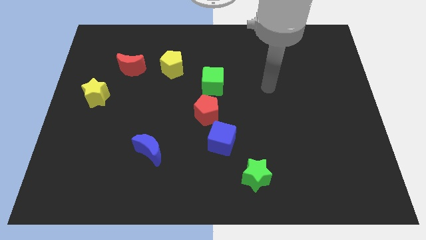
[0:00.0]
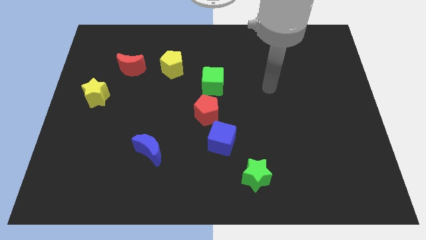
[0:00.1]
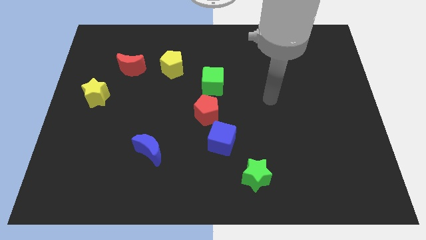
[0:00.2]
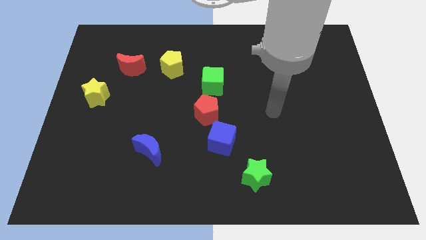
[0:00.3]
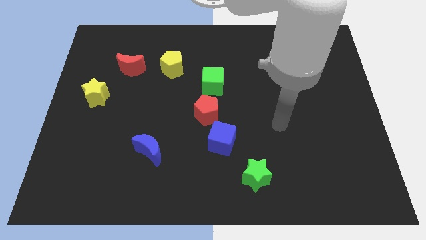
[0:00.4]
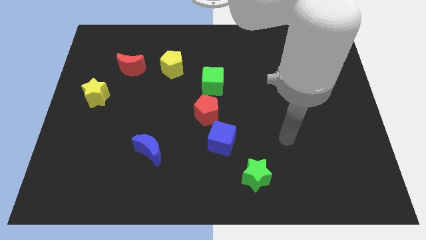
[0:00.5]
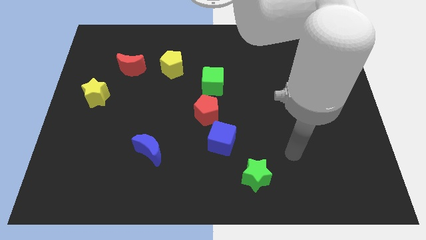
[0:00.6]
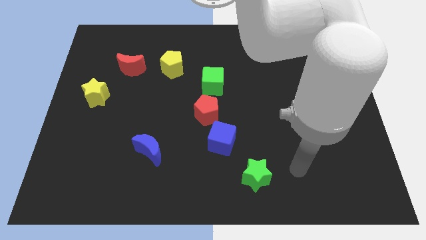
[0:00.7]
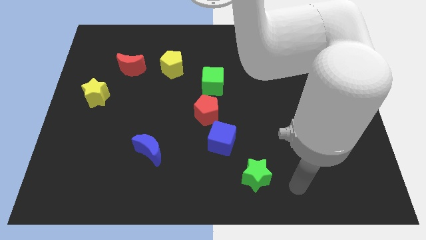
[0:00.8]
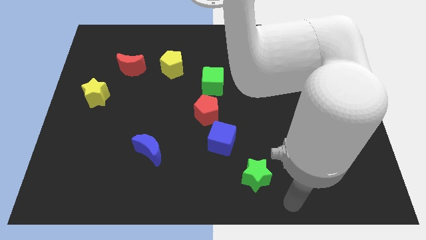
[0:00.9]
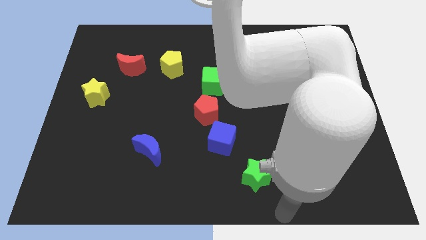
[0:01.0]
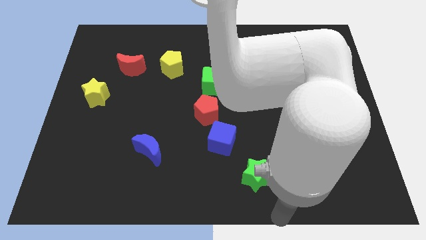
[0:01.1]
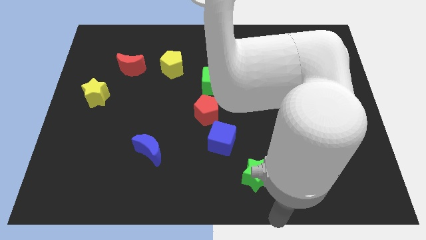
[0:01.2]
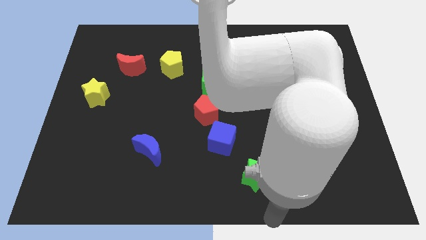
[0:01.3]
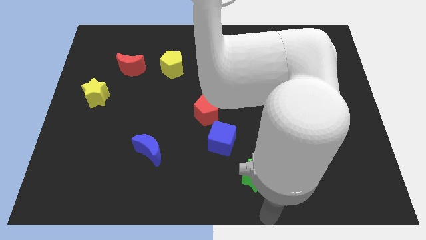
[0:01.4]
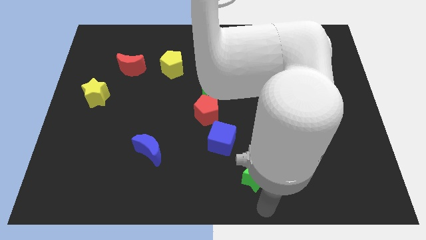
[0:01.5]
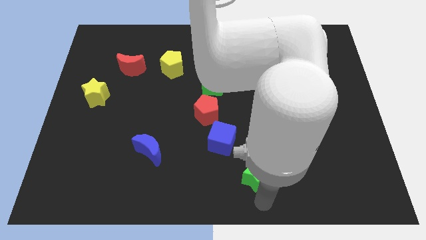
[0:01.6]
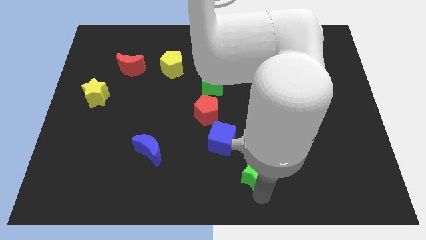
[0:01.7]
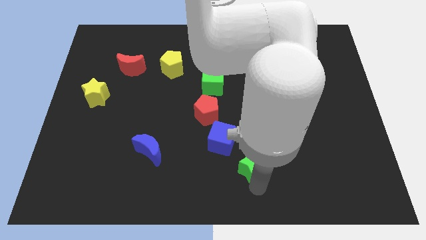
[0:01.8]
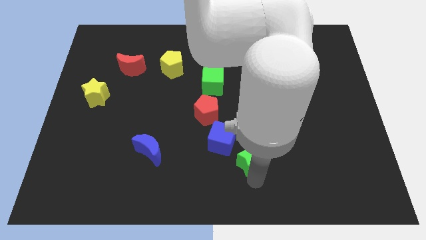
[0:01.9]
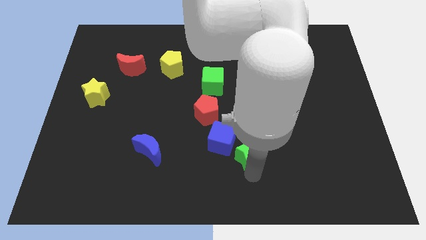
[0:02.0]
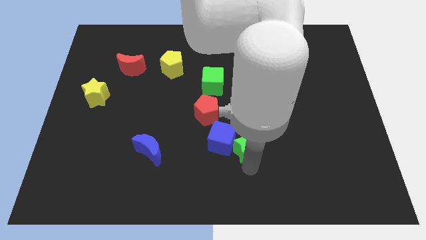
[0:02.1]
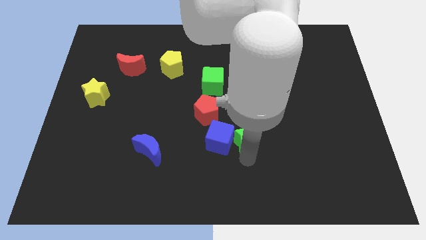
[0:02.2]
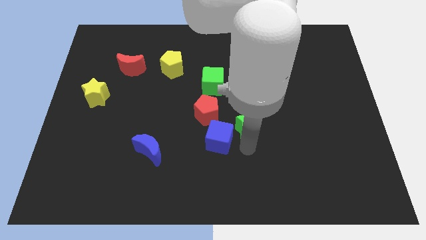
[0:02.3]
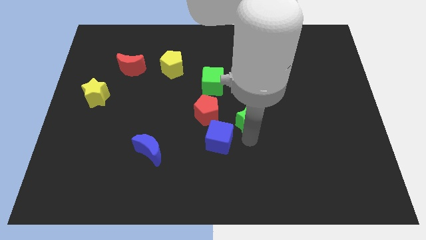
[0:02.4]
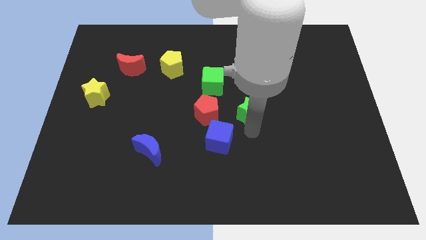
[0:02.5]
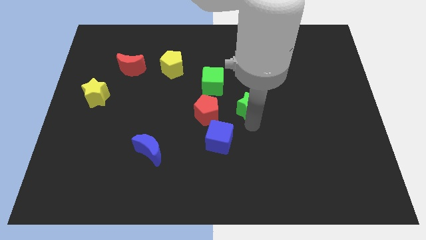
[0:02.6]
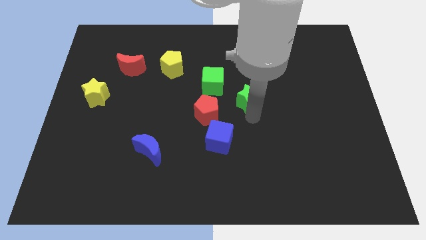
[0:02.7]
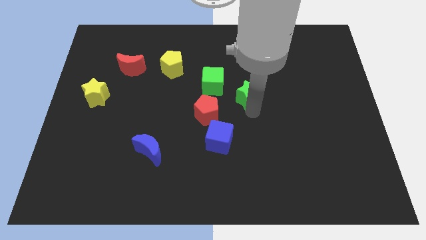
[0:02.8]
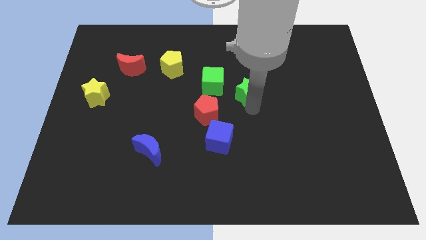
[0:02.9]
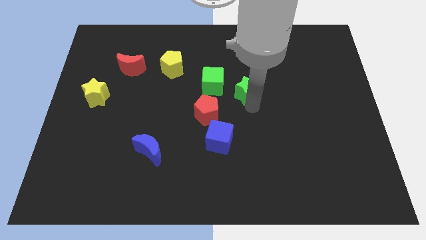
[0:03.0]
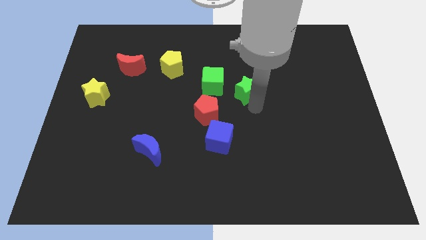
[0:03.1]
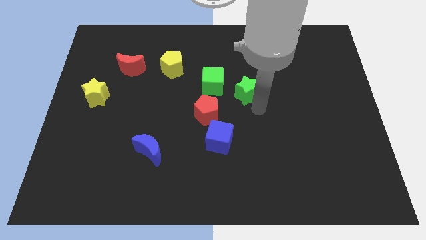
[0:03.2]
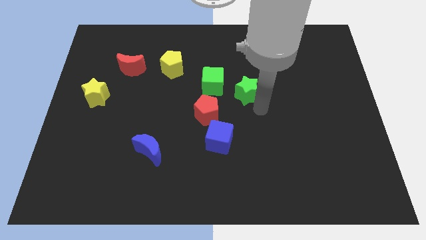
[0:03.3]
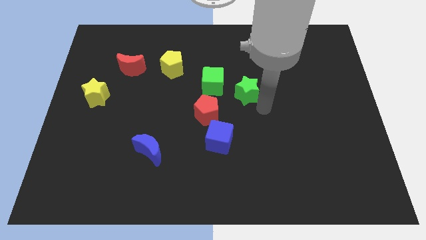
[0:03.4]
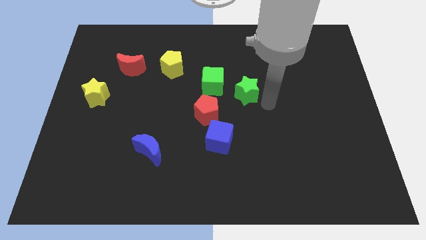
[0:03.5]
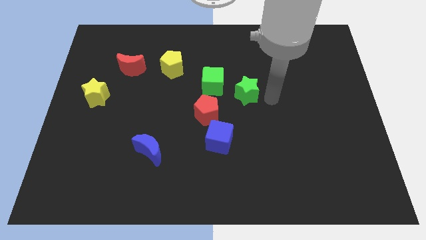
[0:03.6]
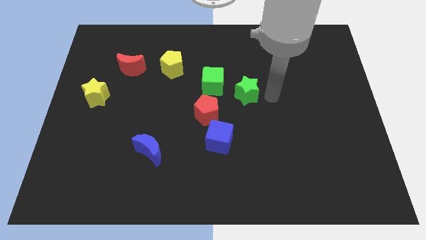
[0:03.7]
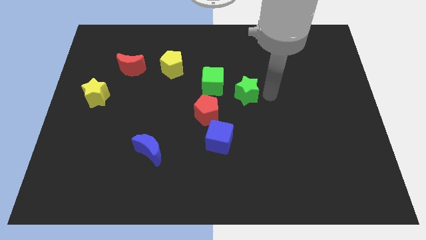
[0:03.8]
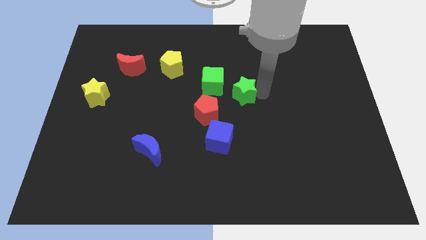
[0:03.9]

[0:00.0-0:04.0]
push the green star to the top of the board

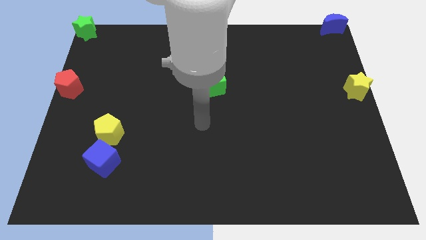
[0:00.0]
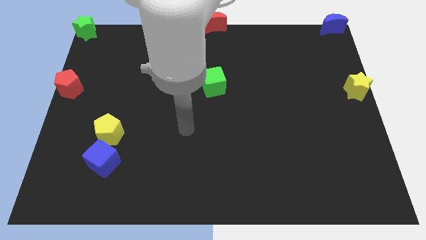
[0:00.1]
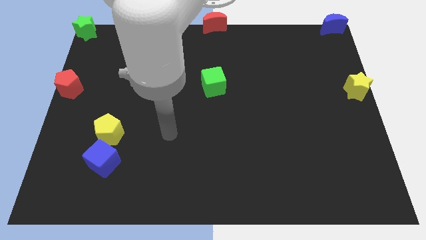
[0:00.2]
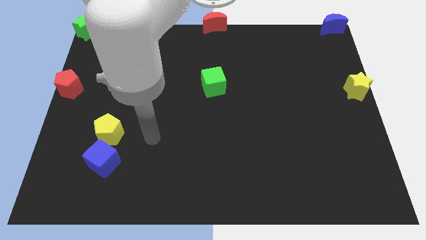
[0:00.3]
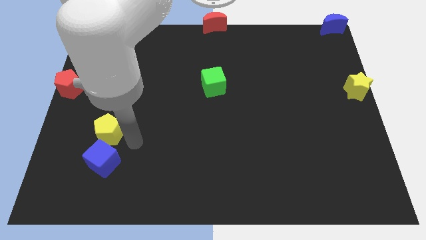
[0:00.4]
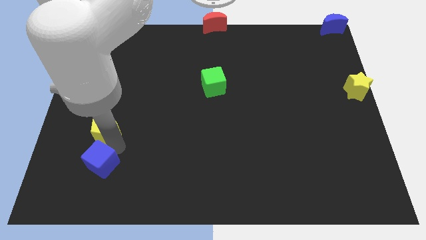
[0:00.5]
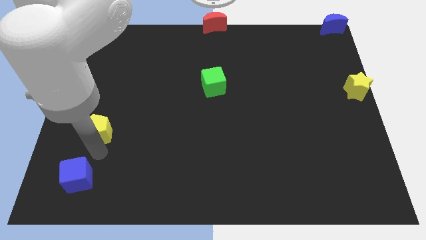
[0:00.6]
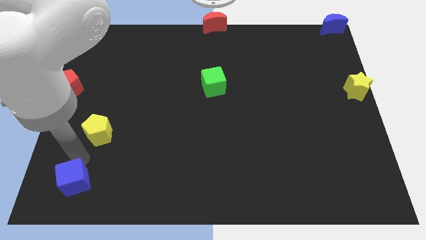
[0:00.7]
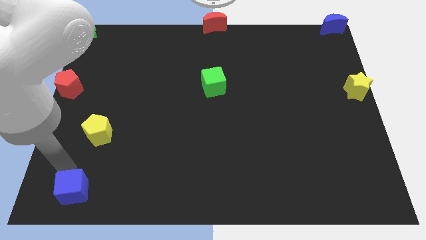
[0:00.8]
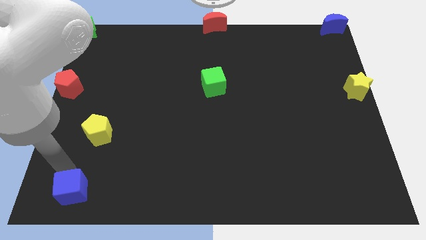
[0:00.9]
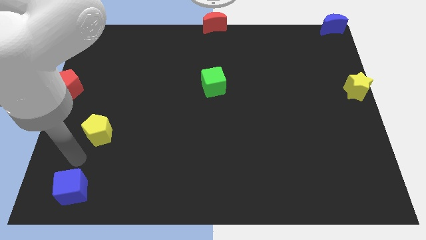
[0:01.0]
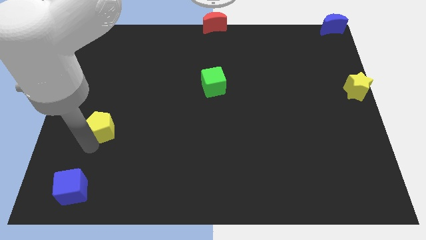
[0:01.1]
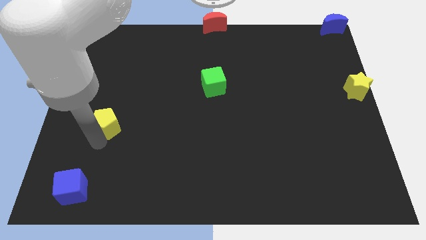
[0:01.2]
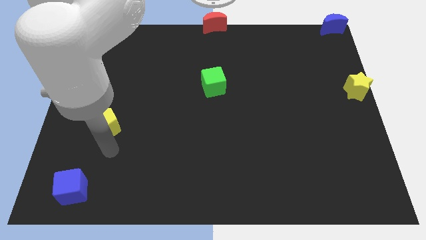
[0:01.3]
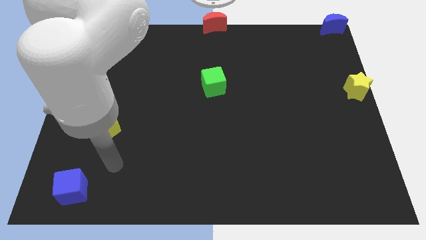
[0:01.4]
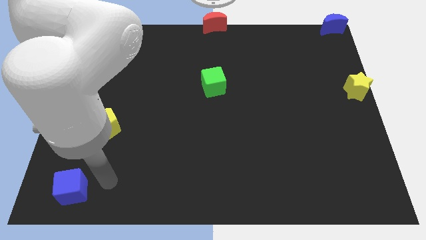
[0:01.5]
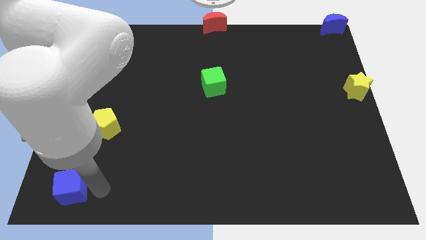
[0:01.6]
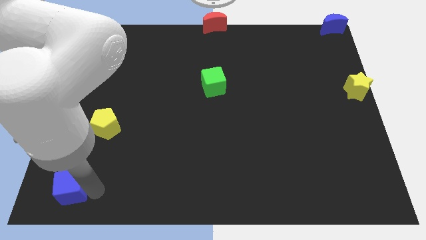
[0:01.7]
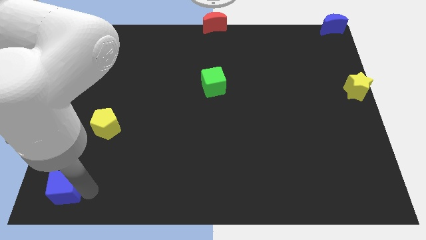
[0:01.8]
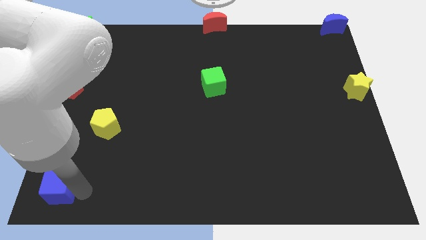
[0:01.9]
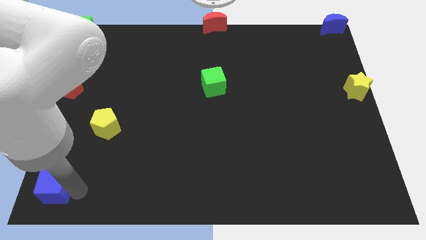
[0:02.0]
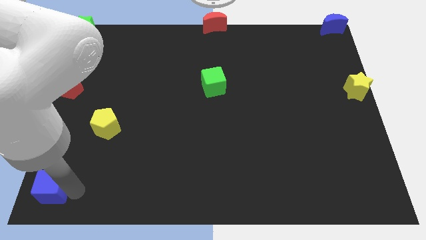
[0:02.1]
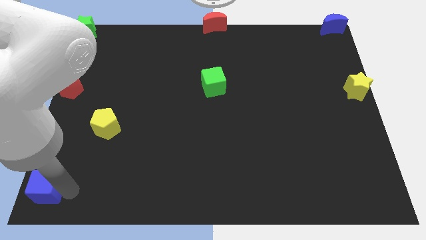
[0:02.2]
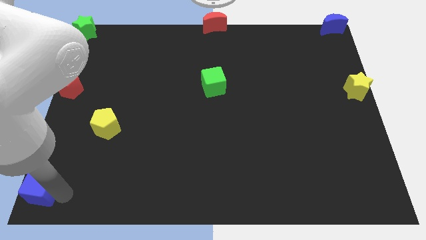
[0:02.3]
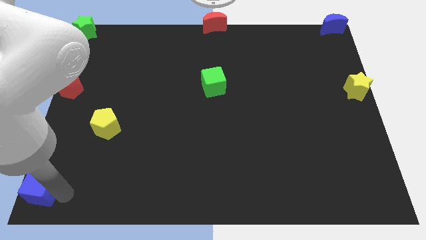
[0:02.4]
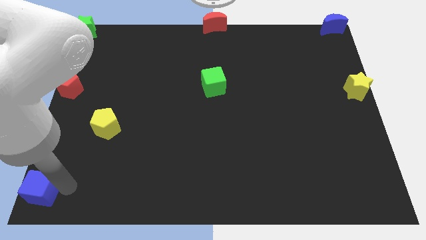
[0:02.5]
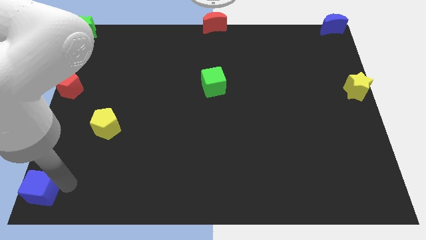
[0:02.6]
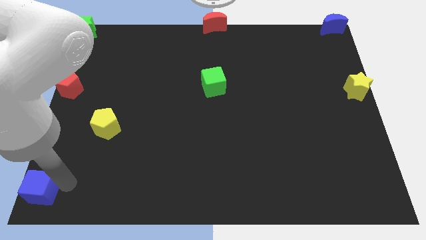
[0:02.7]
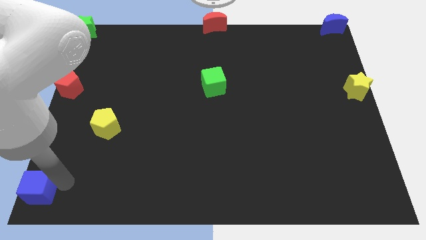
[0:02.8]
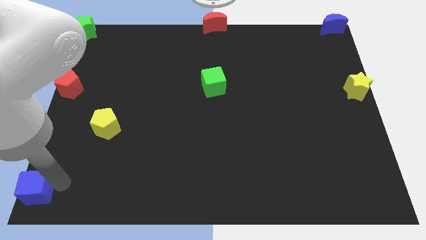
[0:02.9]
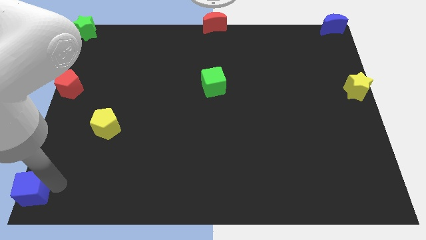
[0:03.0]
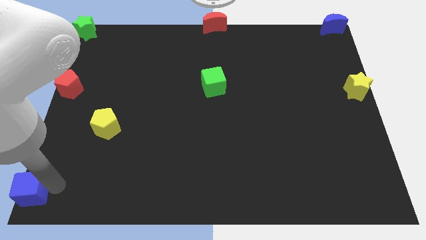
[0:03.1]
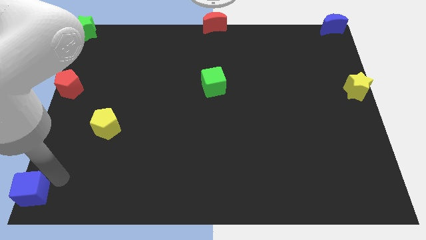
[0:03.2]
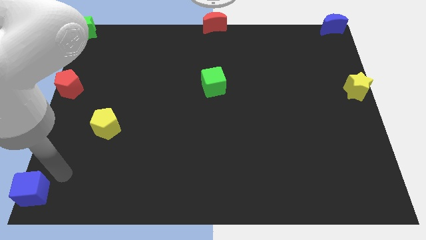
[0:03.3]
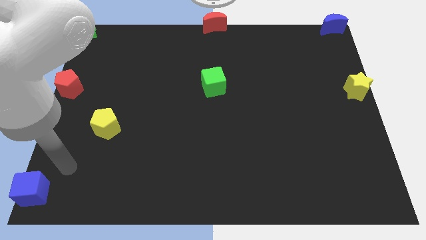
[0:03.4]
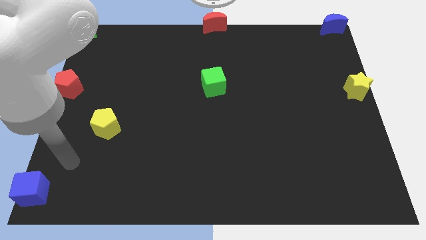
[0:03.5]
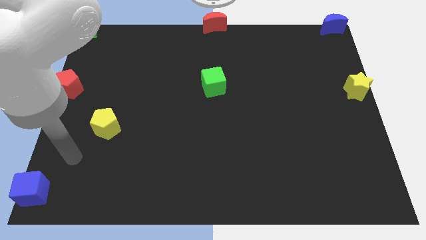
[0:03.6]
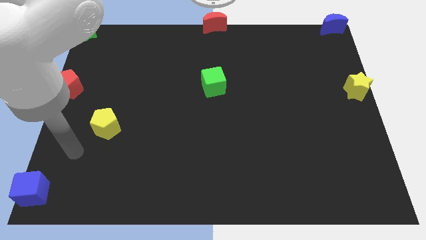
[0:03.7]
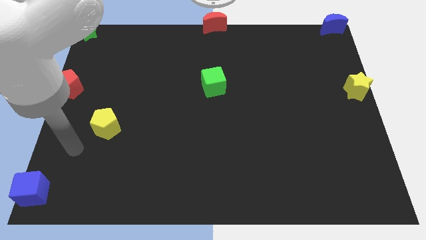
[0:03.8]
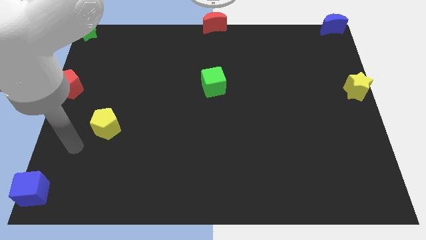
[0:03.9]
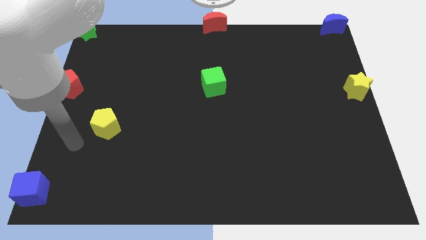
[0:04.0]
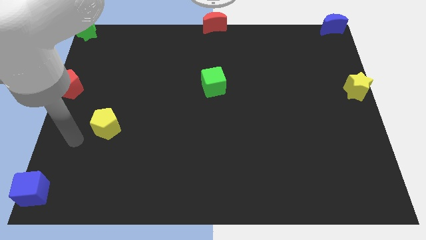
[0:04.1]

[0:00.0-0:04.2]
place the blue cube to the bottom left corner of the board

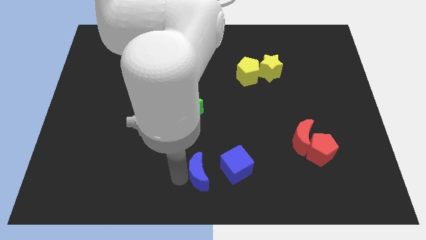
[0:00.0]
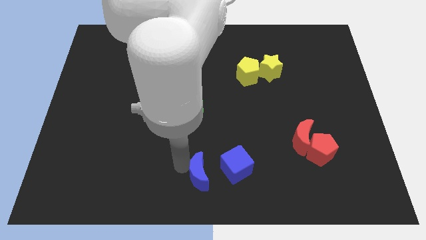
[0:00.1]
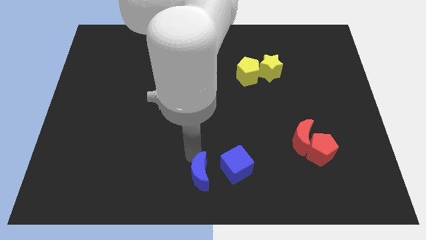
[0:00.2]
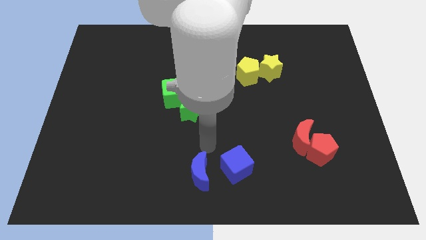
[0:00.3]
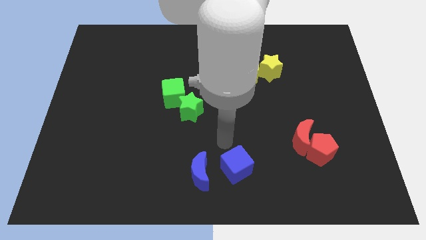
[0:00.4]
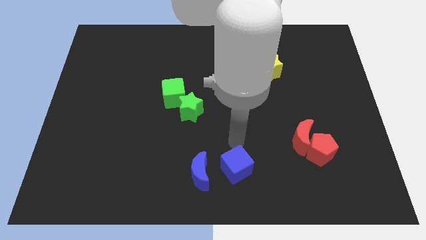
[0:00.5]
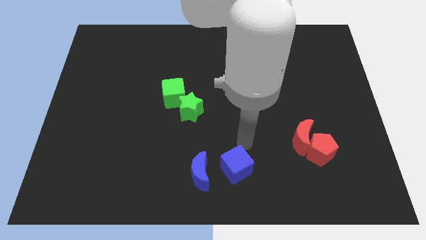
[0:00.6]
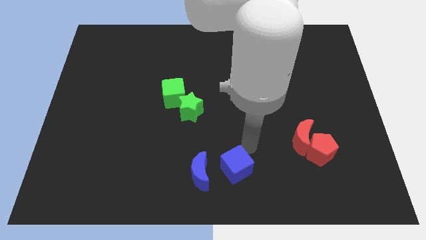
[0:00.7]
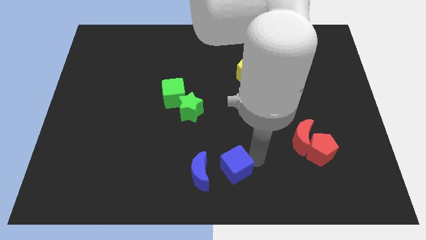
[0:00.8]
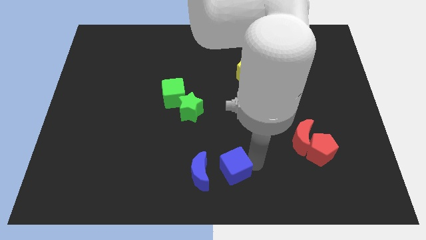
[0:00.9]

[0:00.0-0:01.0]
touch the right side of the blue cube
